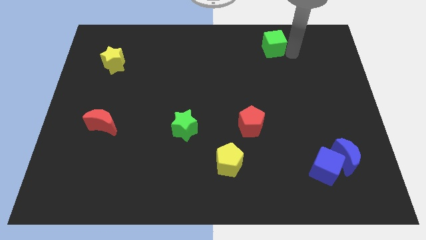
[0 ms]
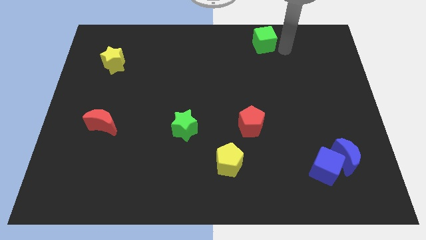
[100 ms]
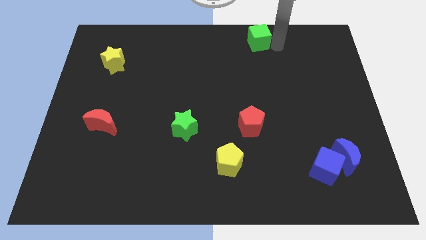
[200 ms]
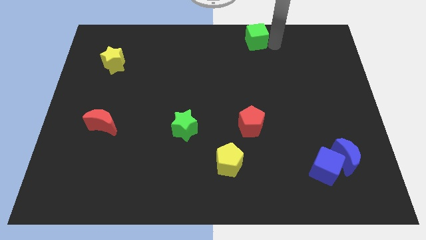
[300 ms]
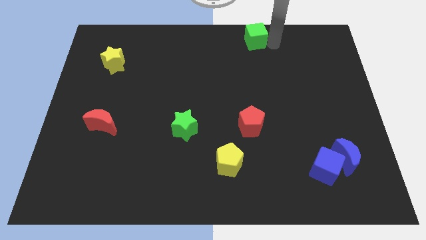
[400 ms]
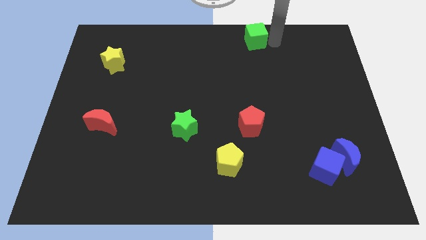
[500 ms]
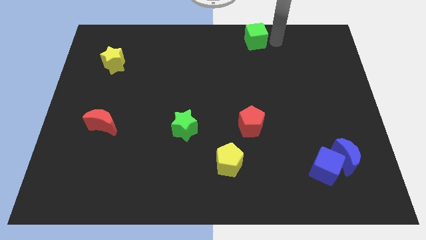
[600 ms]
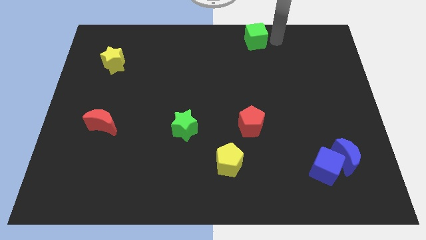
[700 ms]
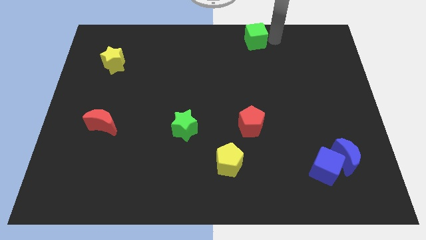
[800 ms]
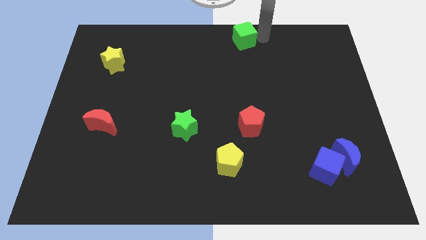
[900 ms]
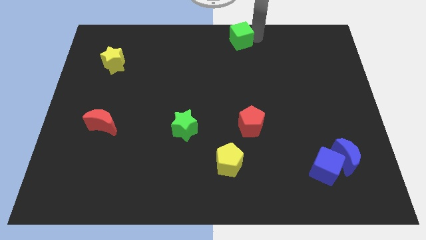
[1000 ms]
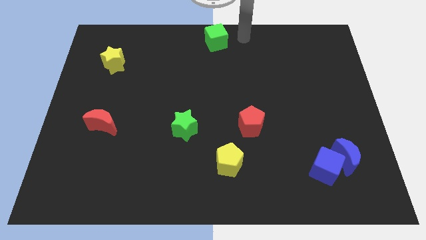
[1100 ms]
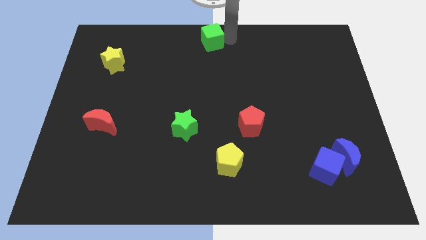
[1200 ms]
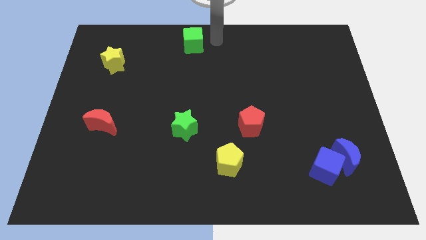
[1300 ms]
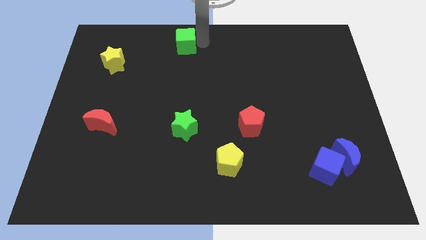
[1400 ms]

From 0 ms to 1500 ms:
push green cube above green star

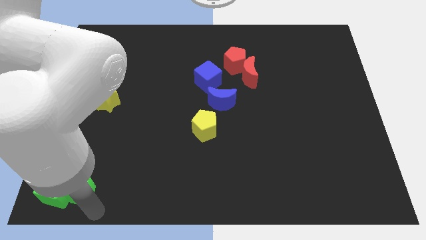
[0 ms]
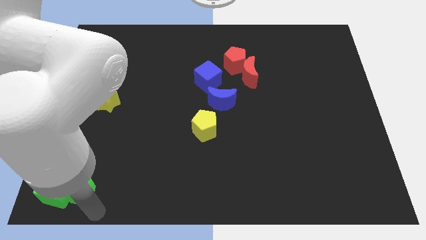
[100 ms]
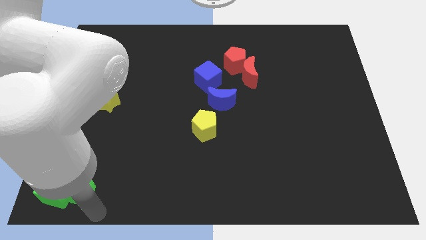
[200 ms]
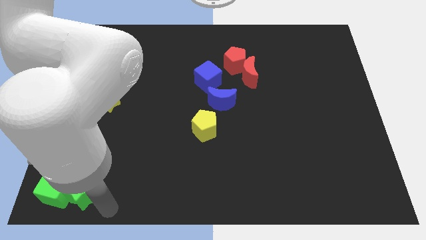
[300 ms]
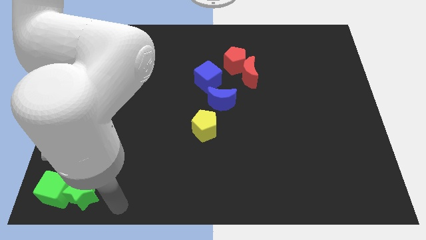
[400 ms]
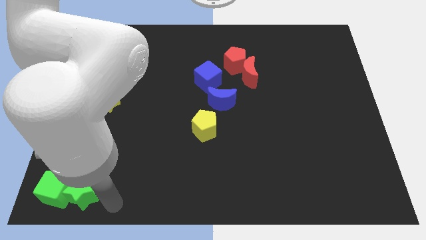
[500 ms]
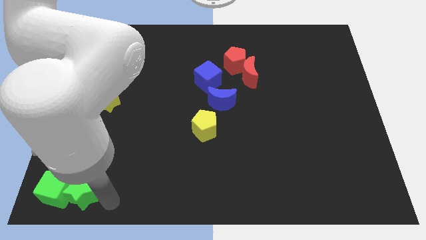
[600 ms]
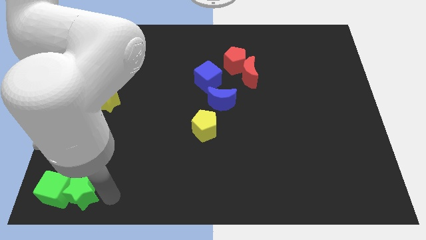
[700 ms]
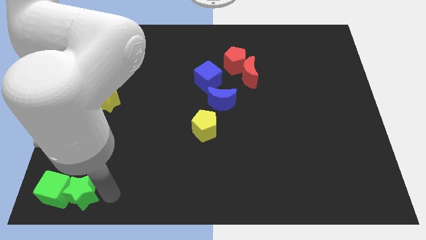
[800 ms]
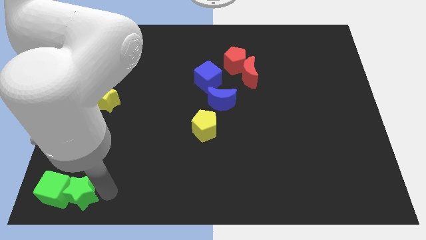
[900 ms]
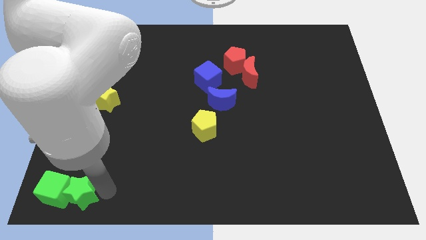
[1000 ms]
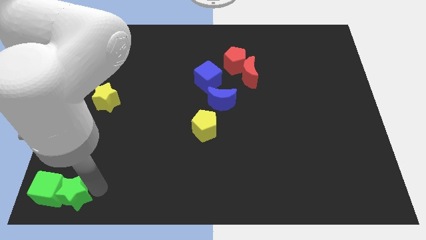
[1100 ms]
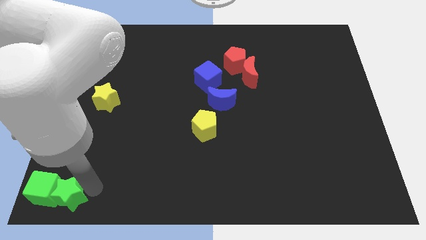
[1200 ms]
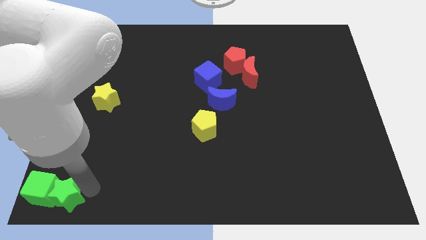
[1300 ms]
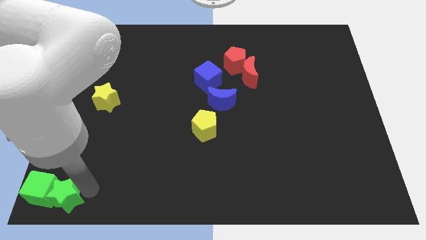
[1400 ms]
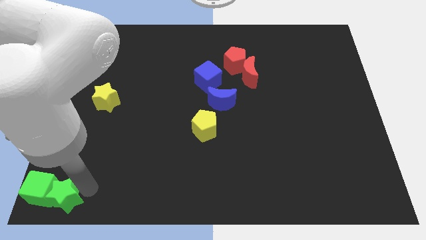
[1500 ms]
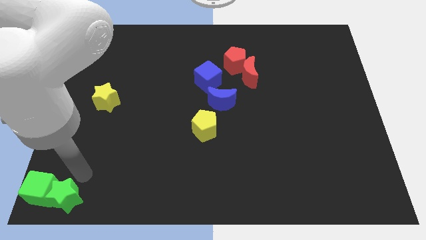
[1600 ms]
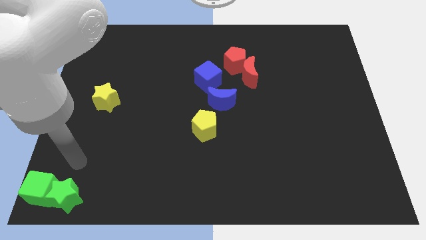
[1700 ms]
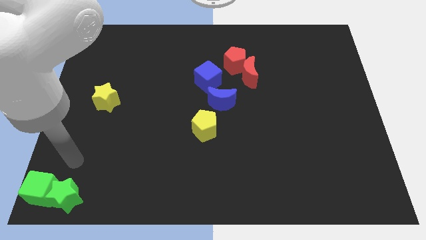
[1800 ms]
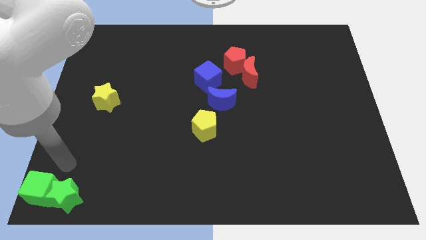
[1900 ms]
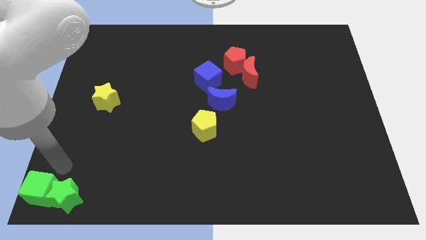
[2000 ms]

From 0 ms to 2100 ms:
push green blocks to the bottom left

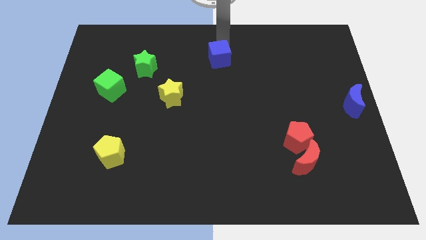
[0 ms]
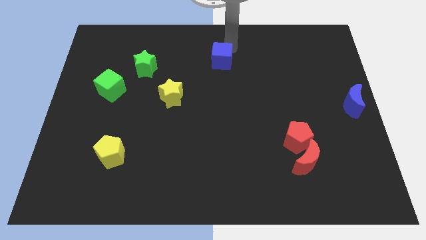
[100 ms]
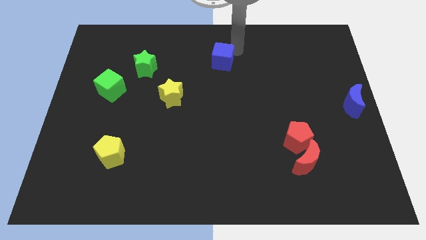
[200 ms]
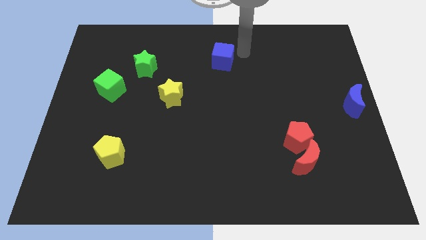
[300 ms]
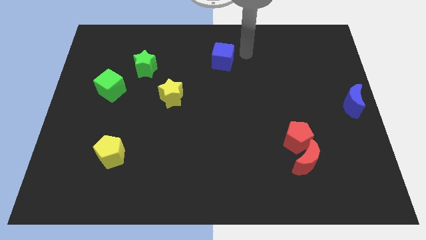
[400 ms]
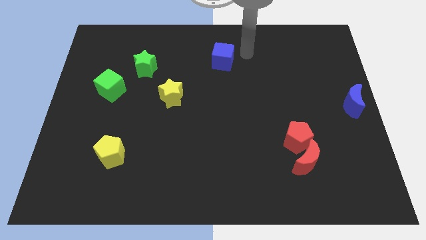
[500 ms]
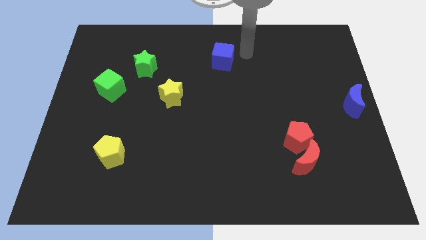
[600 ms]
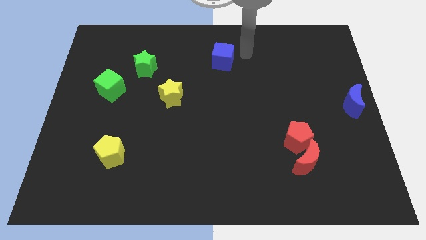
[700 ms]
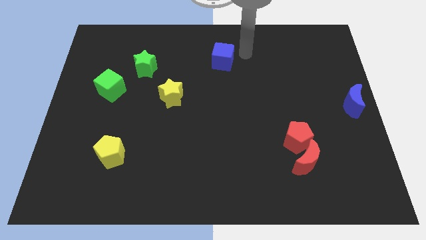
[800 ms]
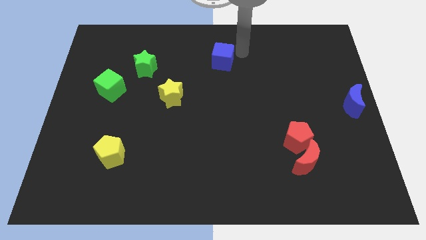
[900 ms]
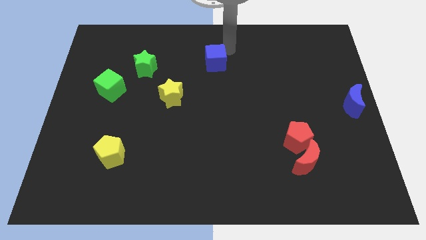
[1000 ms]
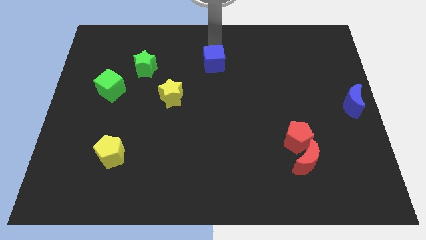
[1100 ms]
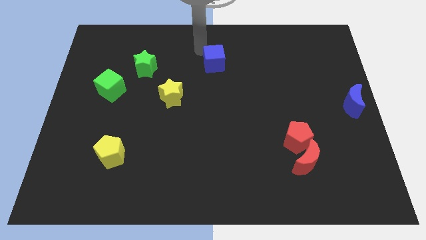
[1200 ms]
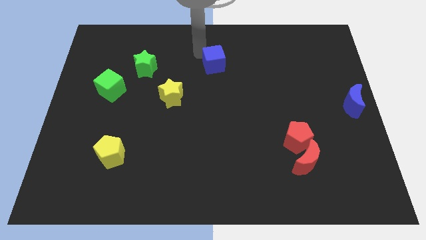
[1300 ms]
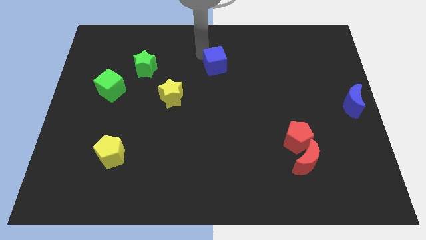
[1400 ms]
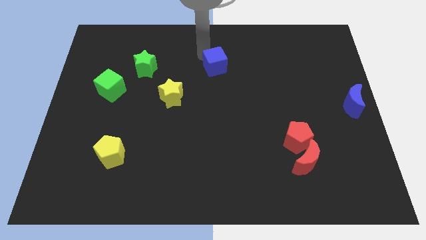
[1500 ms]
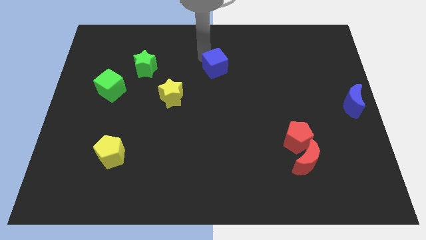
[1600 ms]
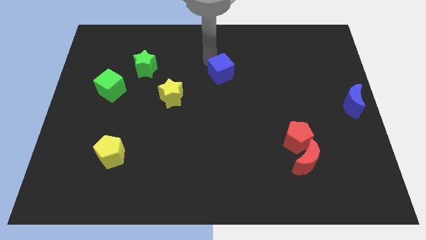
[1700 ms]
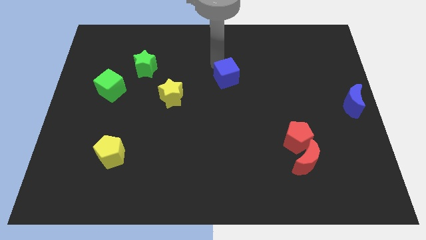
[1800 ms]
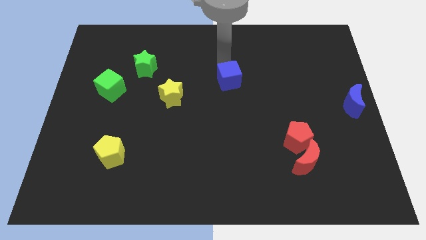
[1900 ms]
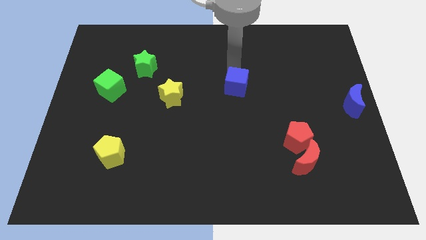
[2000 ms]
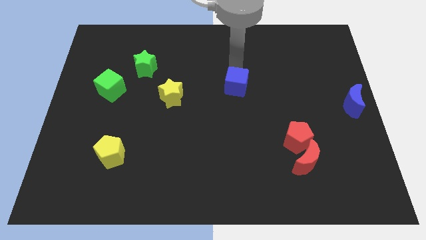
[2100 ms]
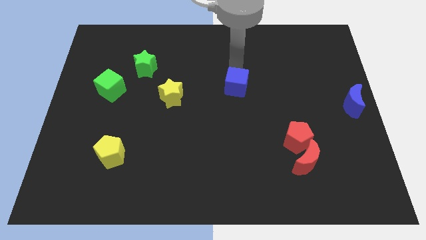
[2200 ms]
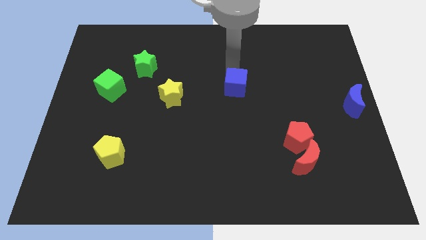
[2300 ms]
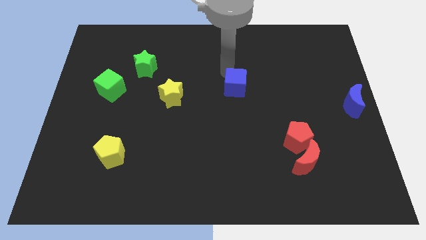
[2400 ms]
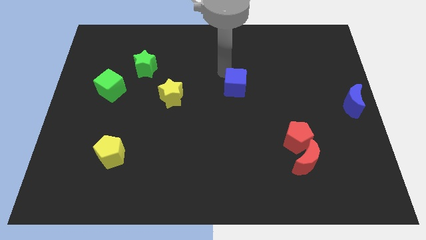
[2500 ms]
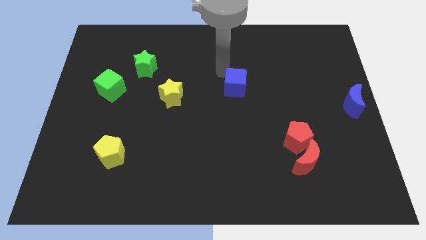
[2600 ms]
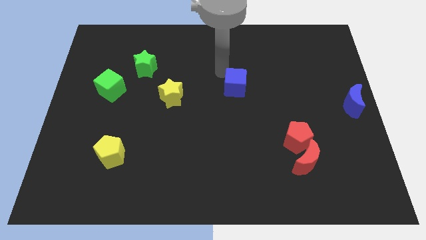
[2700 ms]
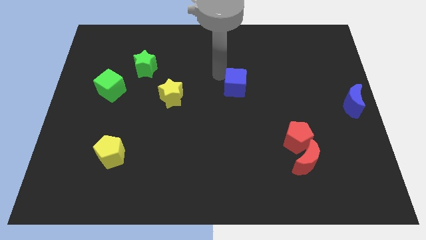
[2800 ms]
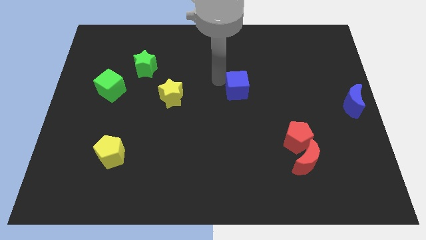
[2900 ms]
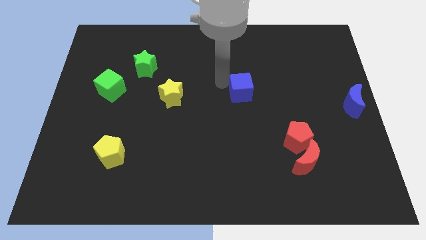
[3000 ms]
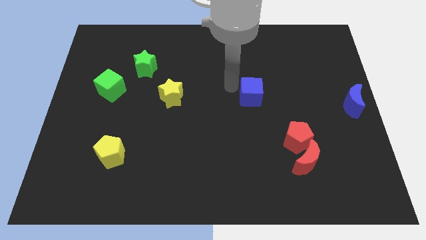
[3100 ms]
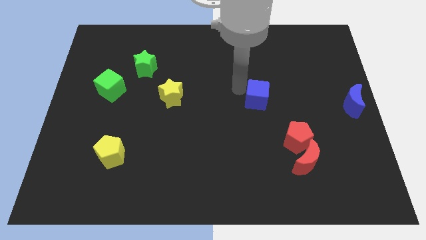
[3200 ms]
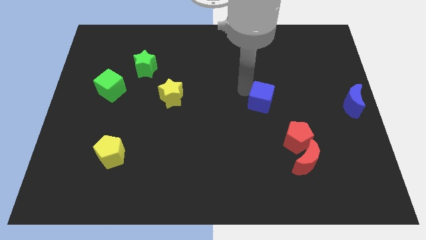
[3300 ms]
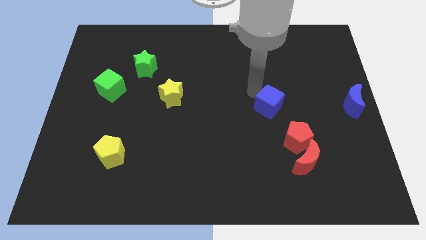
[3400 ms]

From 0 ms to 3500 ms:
push the blue cube between the yellow star and blue moon

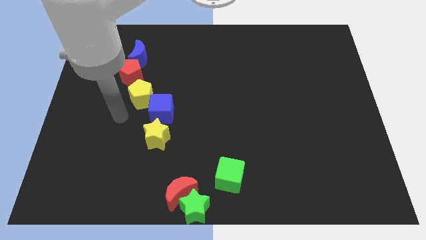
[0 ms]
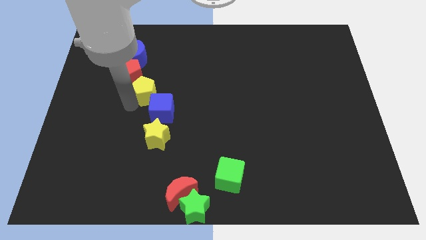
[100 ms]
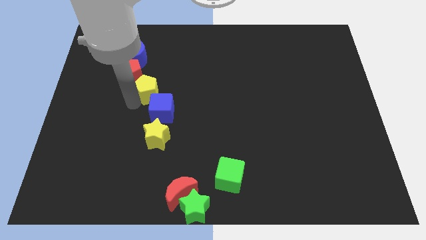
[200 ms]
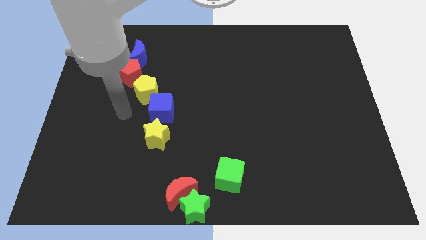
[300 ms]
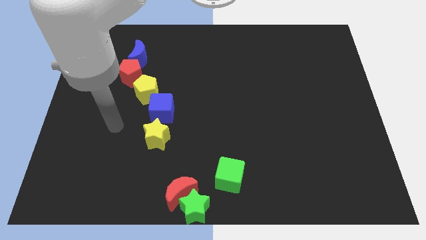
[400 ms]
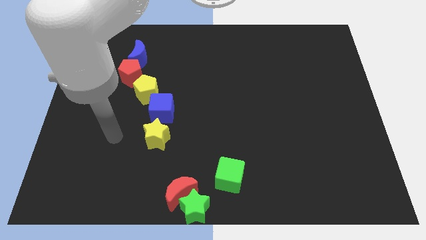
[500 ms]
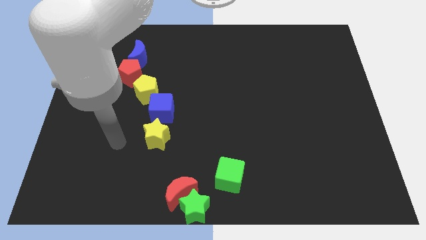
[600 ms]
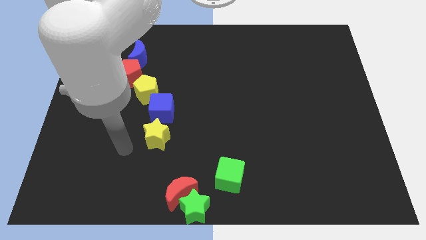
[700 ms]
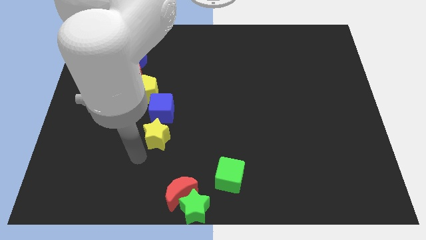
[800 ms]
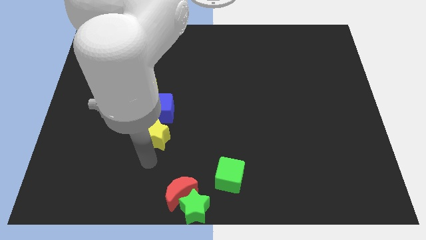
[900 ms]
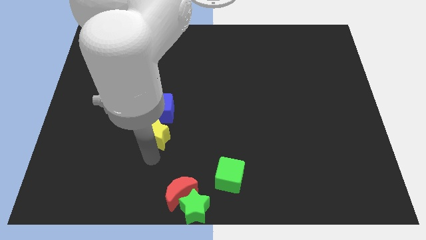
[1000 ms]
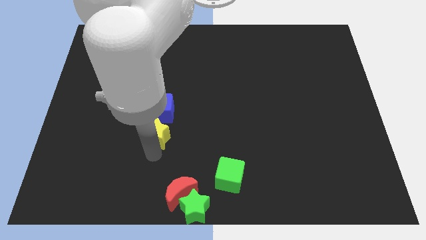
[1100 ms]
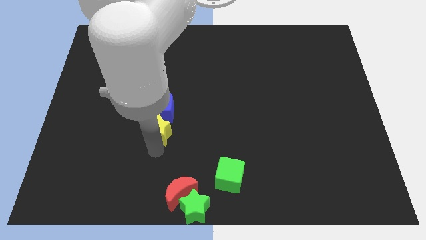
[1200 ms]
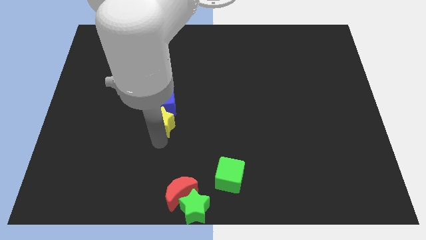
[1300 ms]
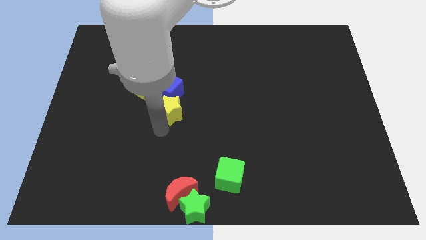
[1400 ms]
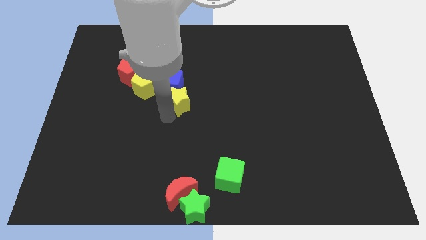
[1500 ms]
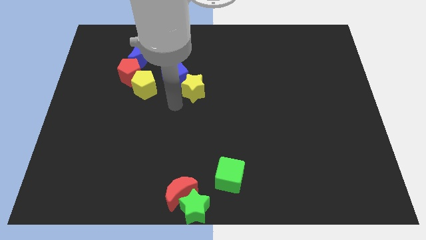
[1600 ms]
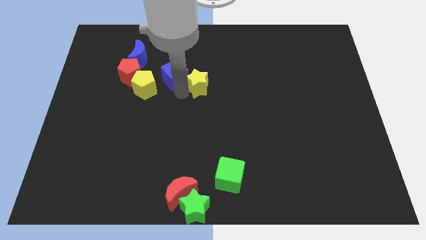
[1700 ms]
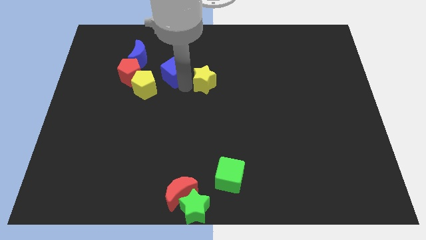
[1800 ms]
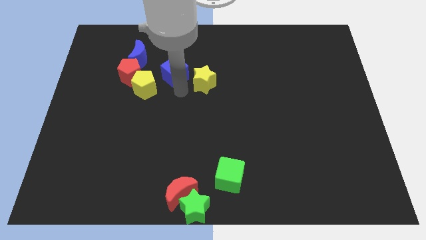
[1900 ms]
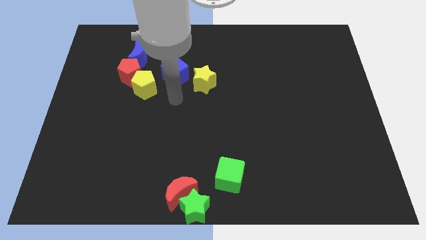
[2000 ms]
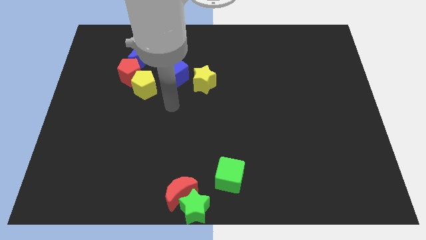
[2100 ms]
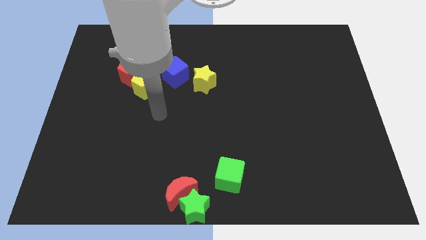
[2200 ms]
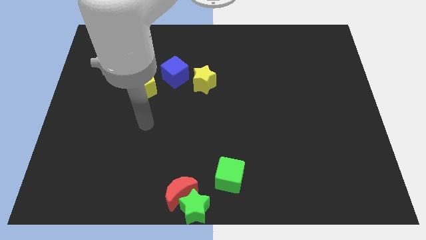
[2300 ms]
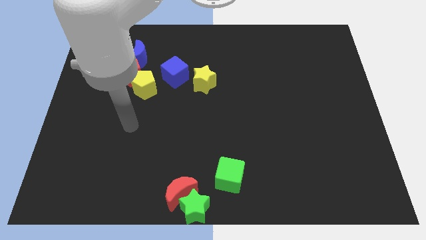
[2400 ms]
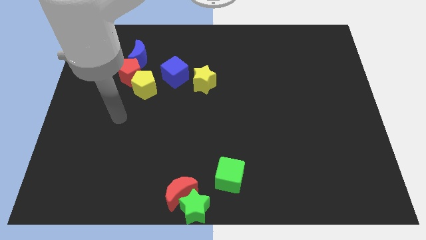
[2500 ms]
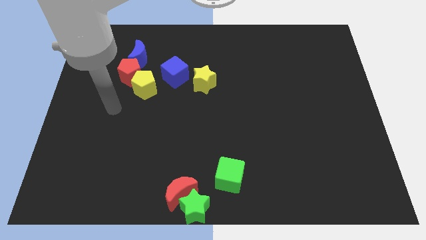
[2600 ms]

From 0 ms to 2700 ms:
push the yellow star to the right of the yellow pentagon
